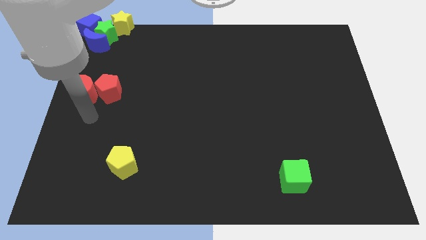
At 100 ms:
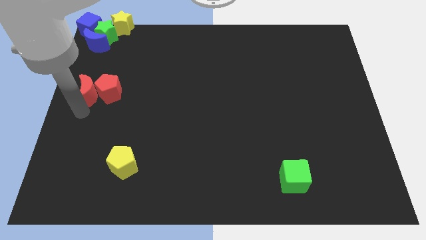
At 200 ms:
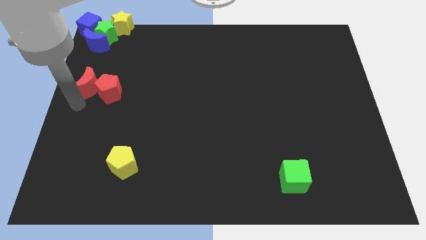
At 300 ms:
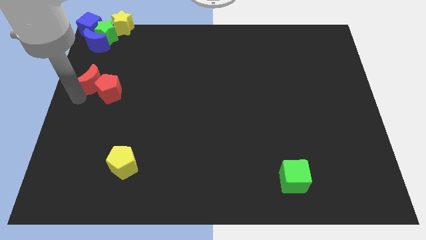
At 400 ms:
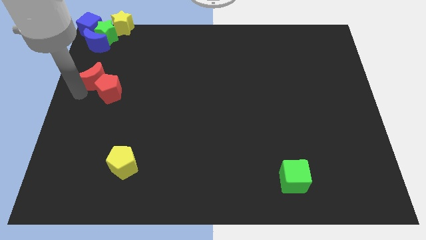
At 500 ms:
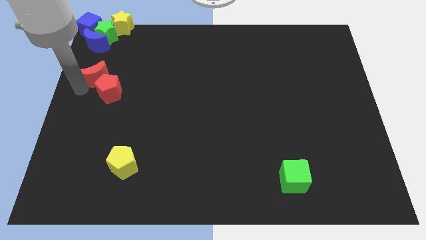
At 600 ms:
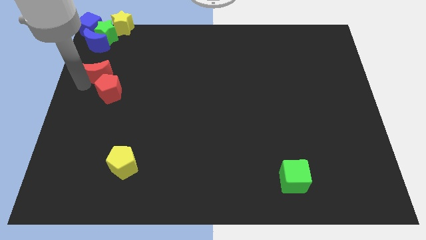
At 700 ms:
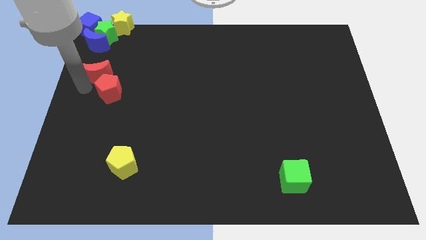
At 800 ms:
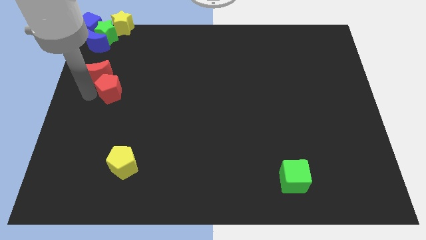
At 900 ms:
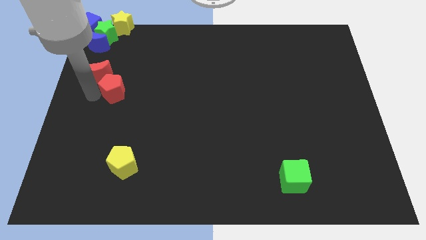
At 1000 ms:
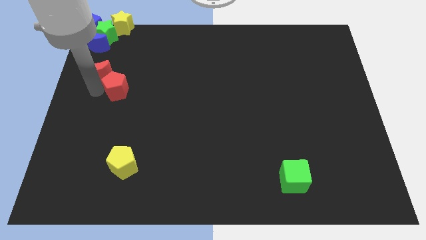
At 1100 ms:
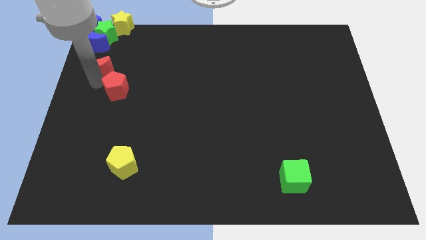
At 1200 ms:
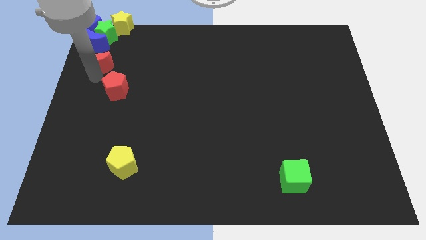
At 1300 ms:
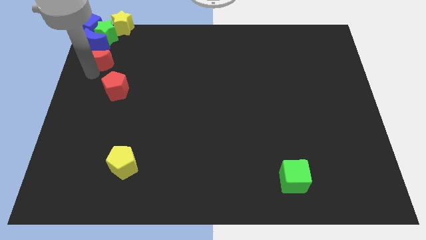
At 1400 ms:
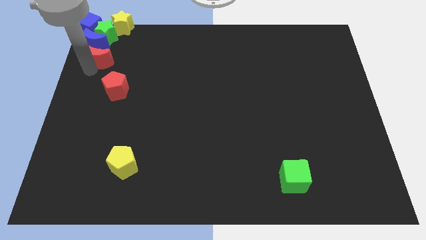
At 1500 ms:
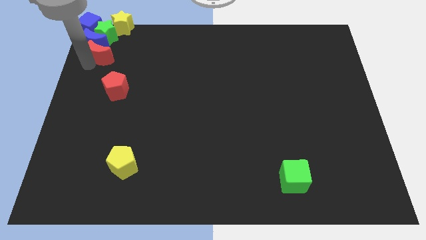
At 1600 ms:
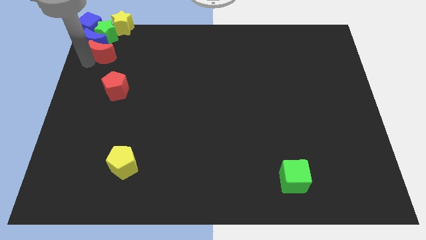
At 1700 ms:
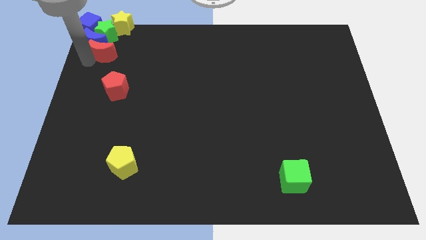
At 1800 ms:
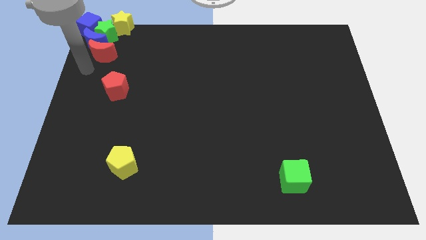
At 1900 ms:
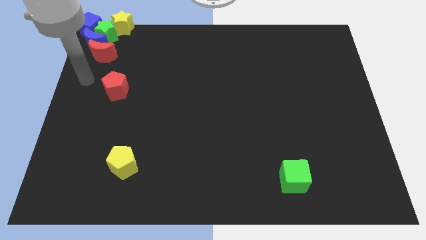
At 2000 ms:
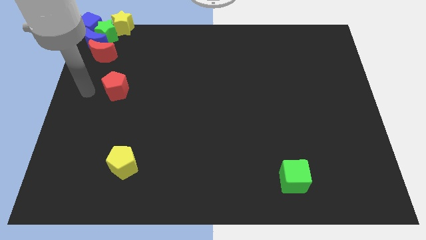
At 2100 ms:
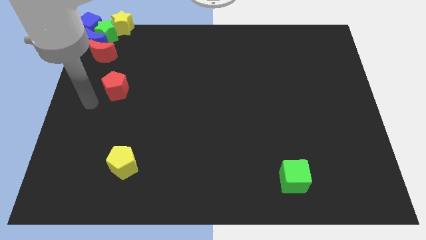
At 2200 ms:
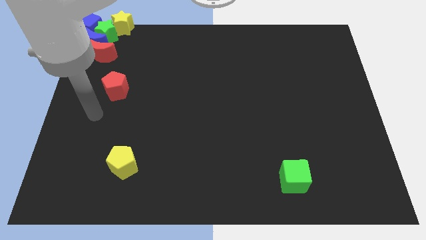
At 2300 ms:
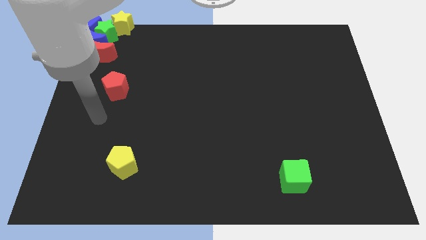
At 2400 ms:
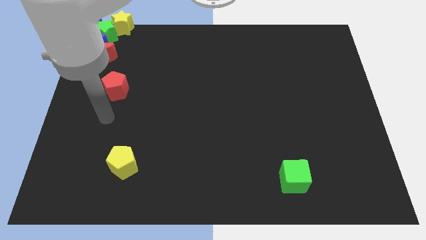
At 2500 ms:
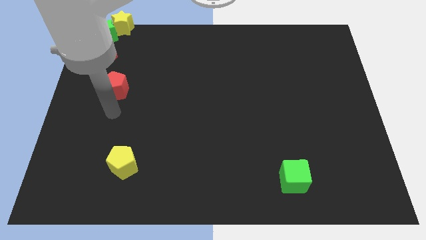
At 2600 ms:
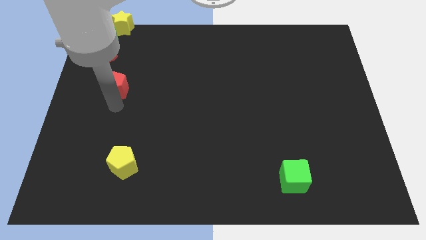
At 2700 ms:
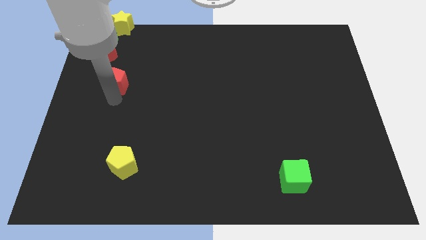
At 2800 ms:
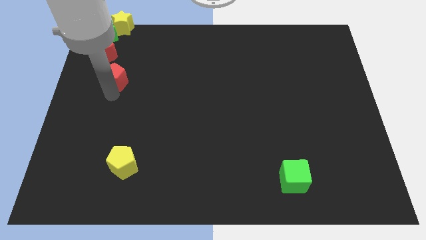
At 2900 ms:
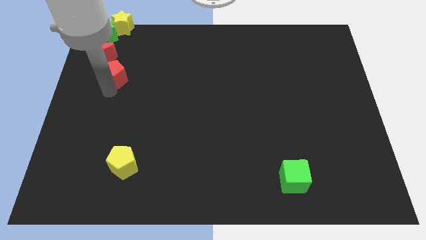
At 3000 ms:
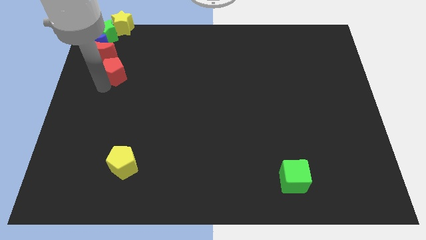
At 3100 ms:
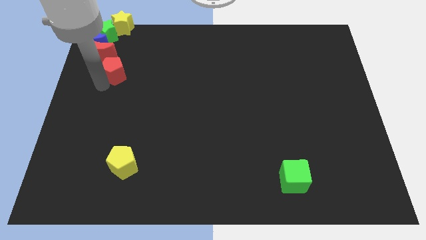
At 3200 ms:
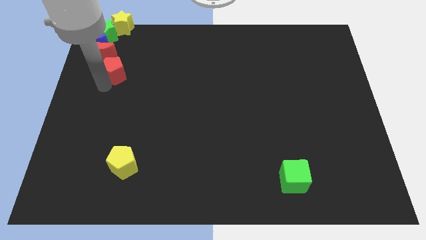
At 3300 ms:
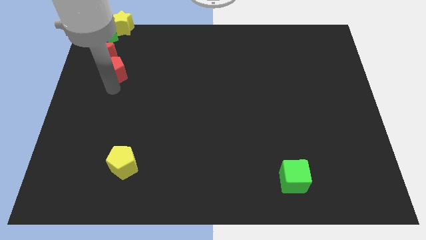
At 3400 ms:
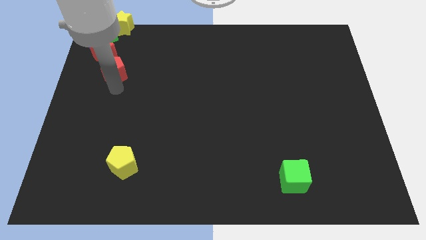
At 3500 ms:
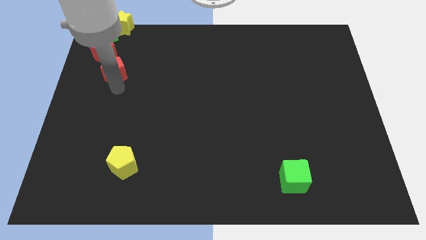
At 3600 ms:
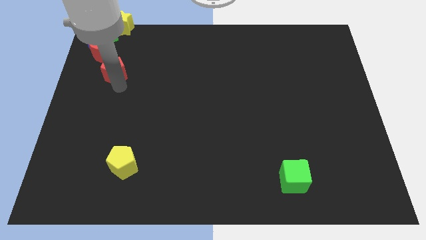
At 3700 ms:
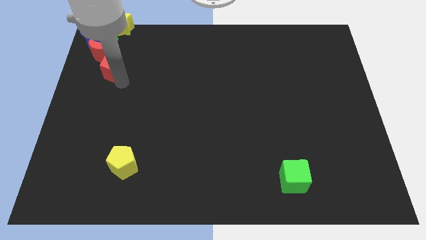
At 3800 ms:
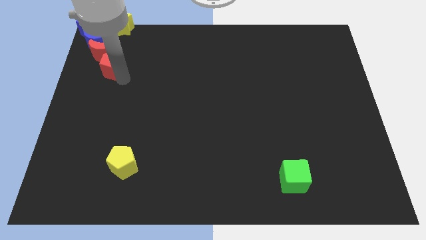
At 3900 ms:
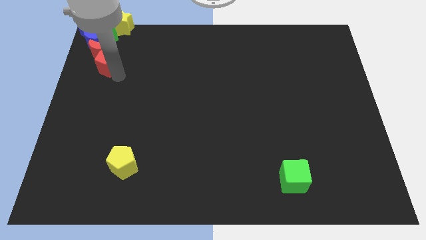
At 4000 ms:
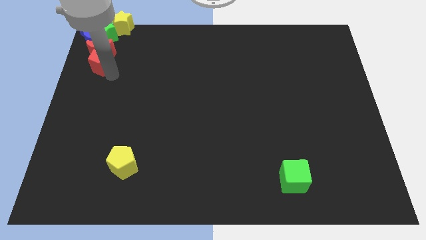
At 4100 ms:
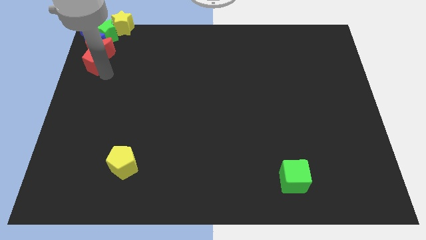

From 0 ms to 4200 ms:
move the red blocks towards the top left

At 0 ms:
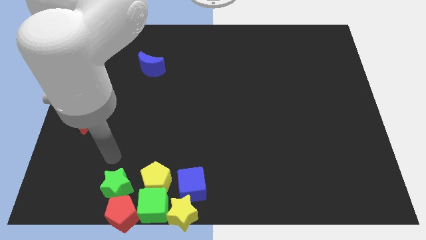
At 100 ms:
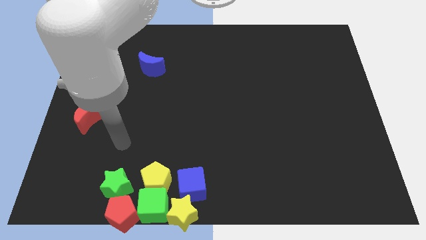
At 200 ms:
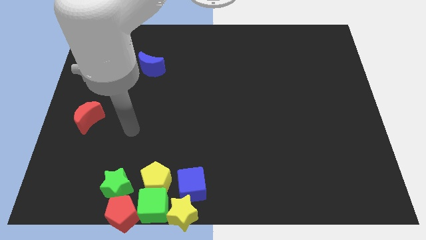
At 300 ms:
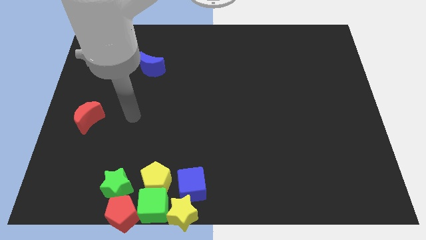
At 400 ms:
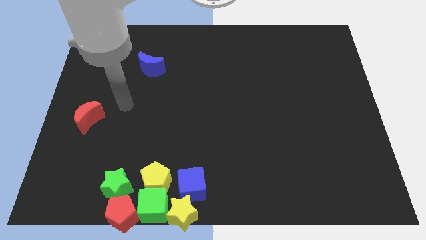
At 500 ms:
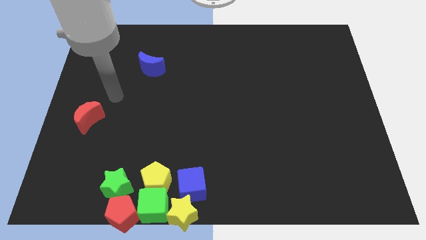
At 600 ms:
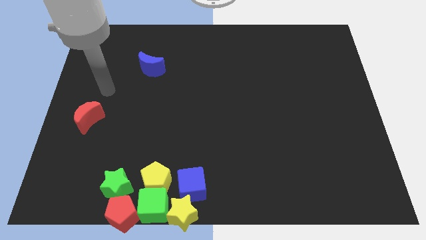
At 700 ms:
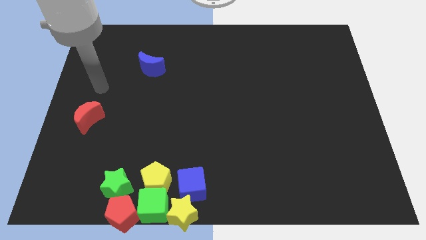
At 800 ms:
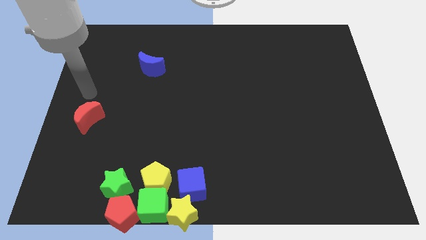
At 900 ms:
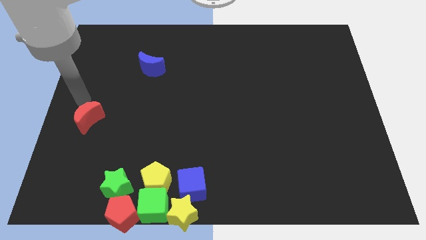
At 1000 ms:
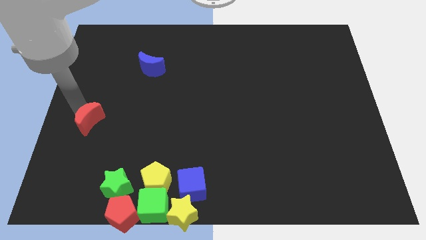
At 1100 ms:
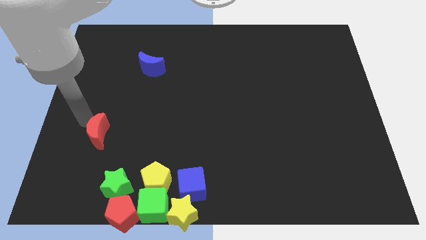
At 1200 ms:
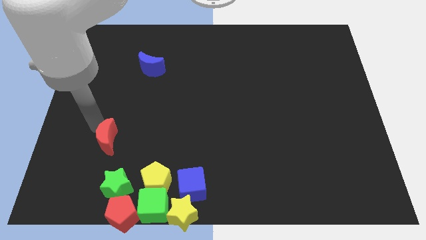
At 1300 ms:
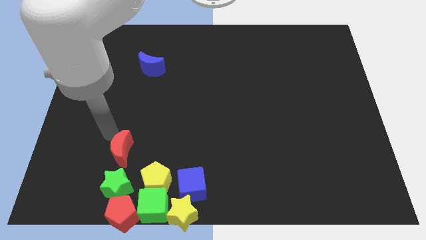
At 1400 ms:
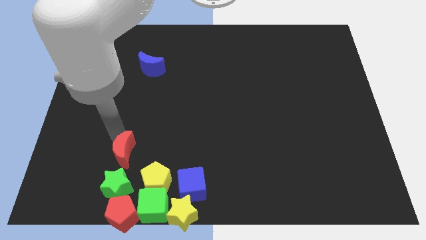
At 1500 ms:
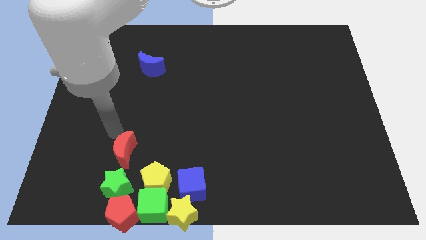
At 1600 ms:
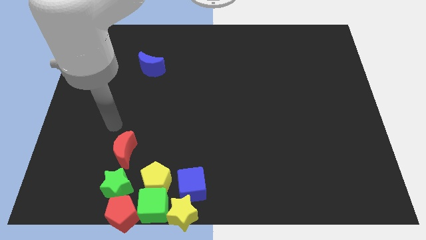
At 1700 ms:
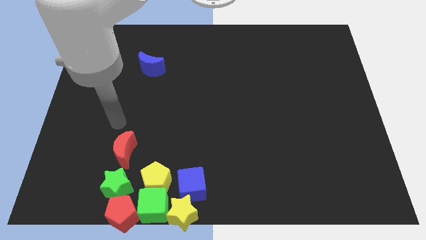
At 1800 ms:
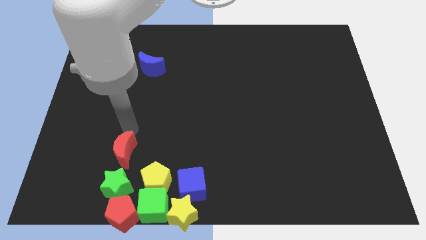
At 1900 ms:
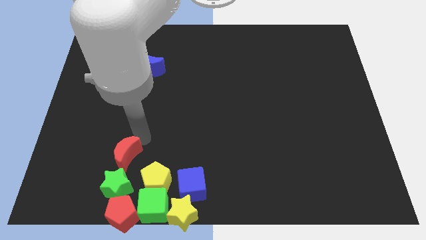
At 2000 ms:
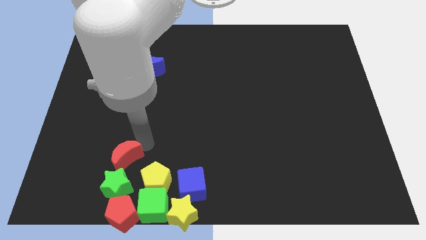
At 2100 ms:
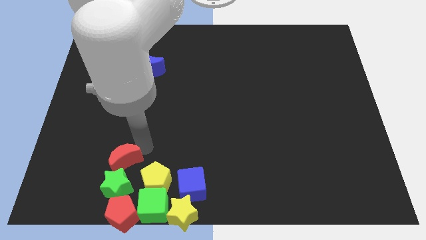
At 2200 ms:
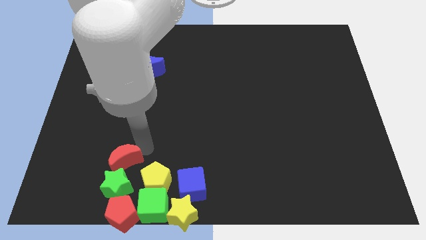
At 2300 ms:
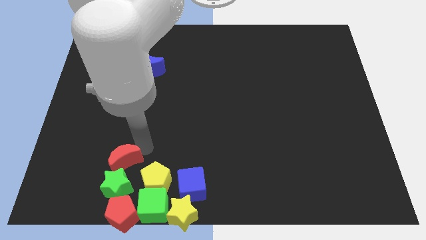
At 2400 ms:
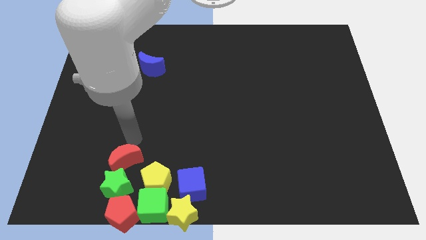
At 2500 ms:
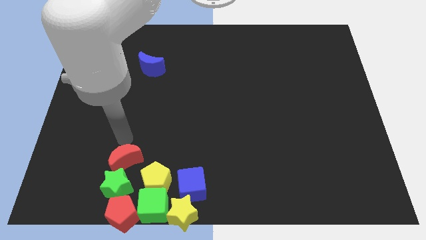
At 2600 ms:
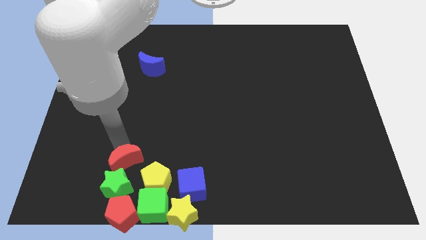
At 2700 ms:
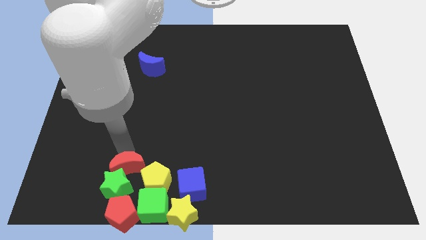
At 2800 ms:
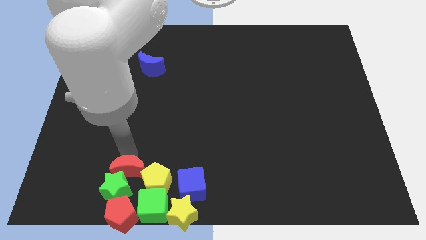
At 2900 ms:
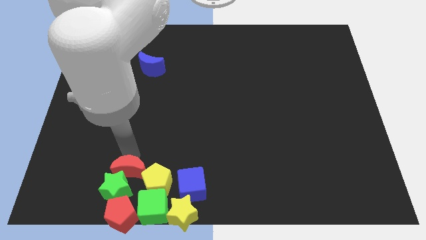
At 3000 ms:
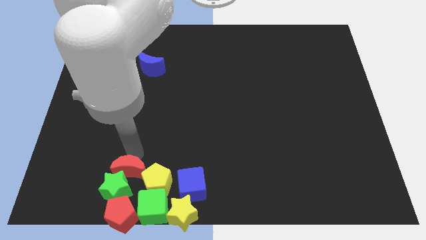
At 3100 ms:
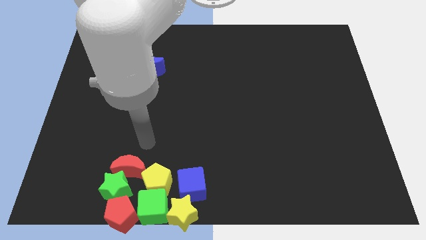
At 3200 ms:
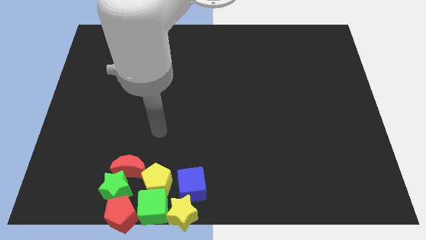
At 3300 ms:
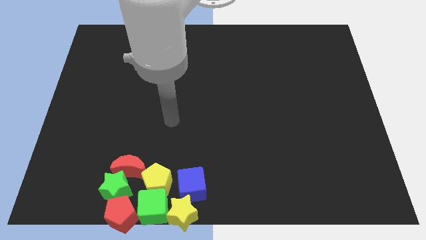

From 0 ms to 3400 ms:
place the red moon to the top side of the green star

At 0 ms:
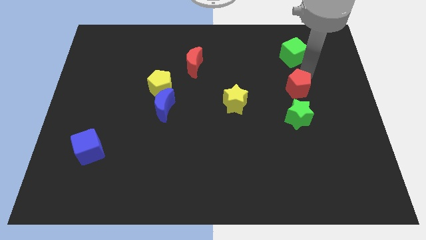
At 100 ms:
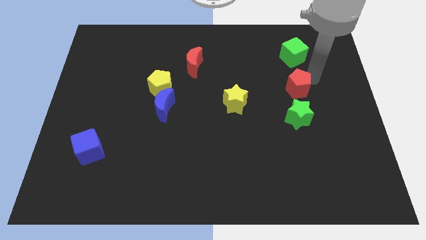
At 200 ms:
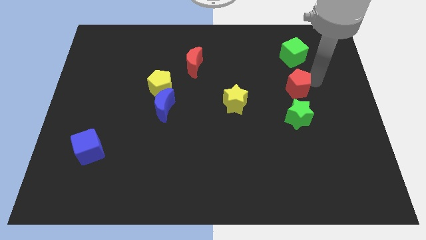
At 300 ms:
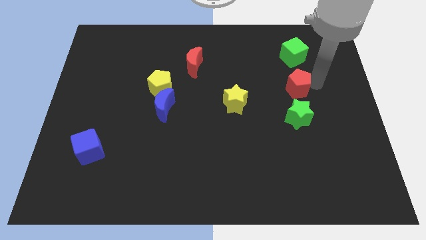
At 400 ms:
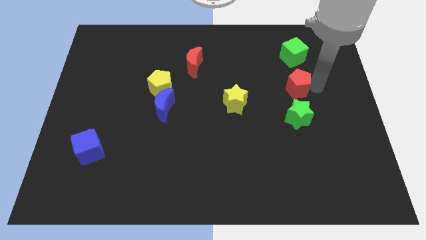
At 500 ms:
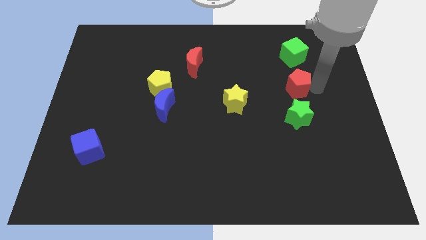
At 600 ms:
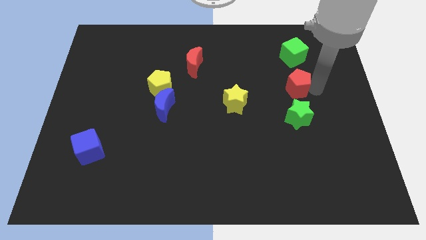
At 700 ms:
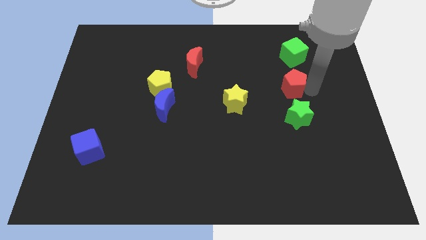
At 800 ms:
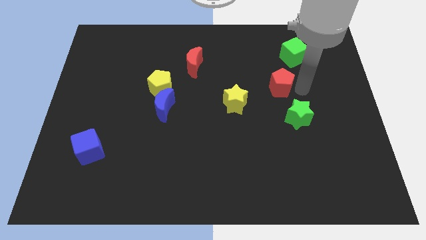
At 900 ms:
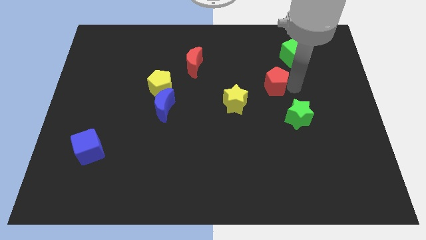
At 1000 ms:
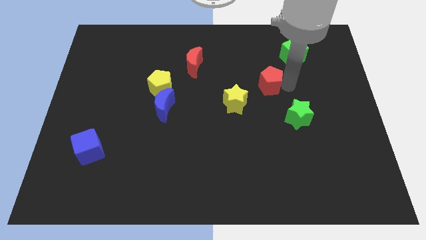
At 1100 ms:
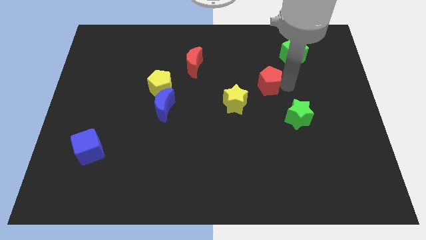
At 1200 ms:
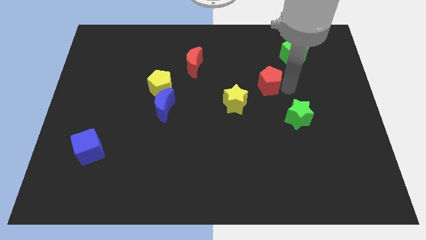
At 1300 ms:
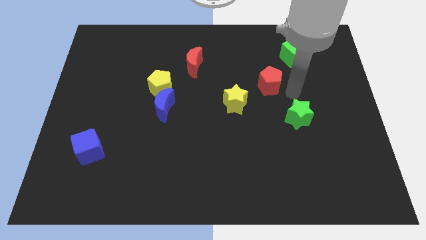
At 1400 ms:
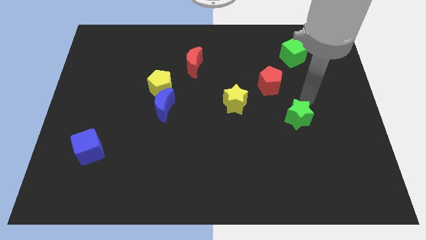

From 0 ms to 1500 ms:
put the red pentagon in between the green cube and yellow star
